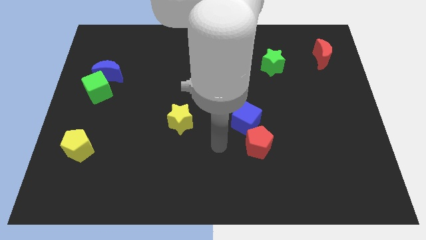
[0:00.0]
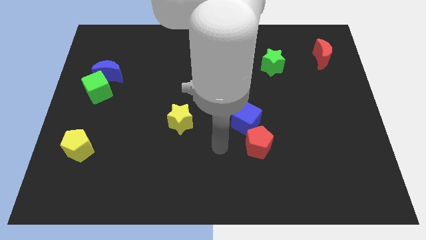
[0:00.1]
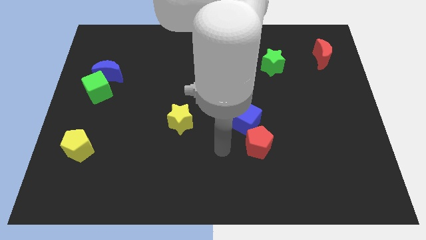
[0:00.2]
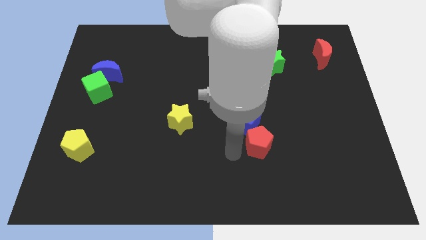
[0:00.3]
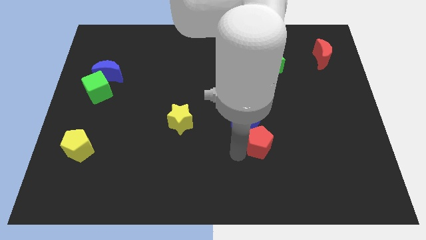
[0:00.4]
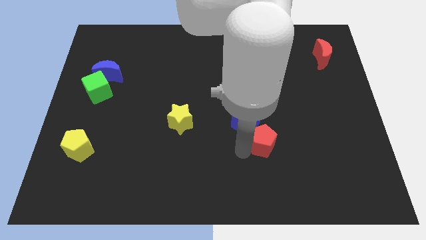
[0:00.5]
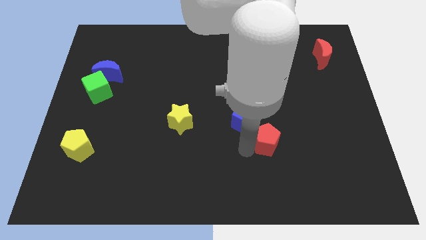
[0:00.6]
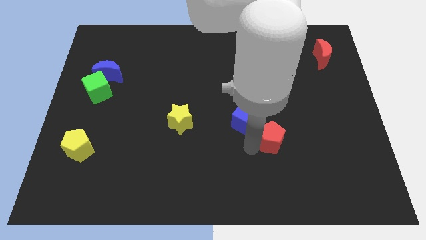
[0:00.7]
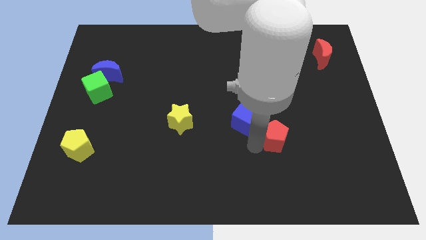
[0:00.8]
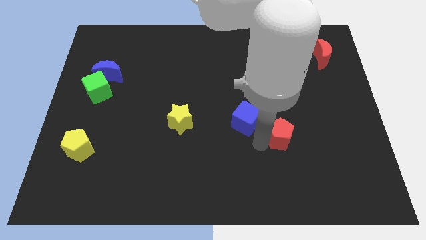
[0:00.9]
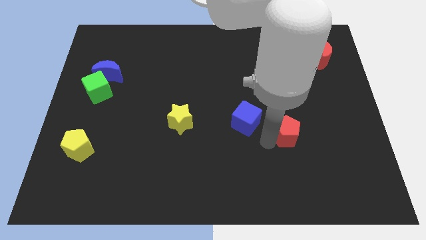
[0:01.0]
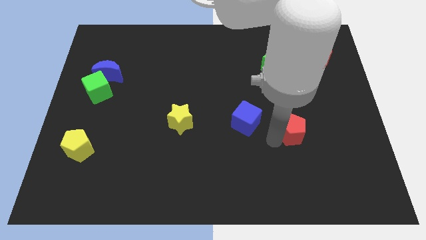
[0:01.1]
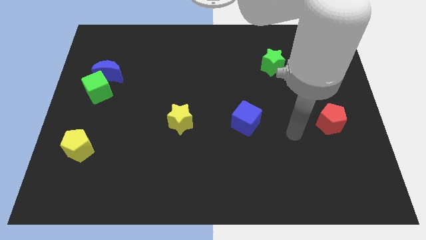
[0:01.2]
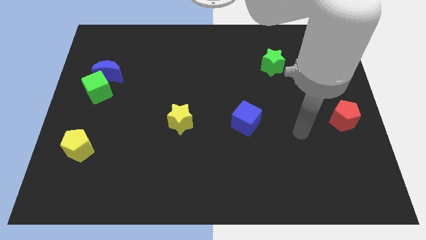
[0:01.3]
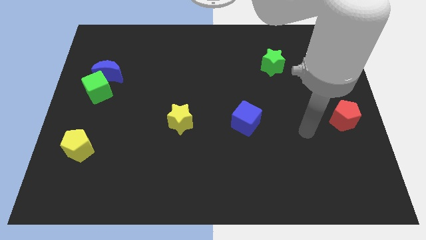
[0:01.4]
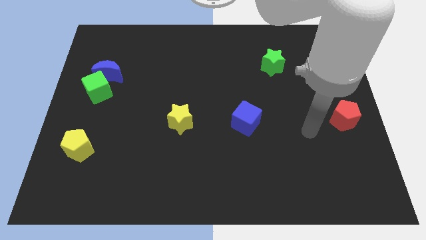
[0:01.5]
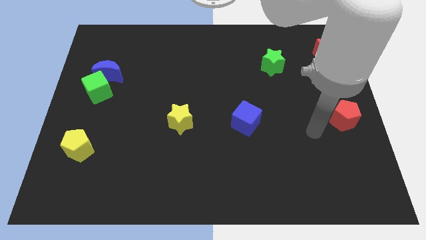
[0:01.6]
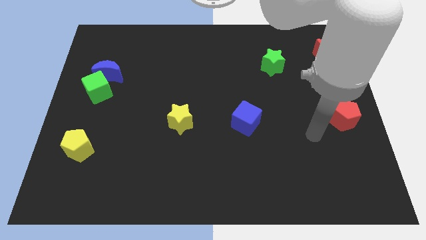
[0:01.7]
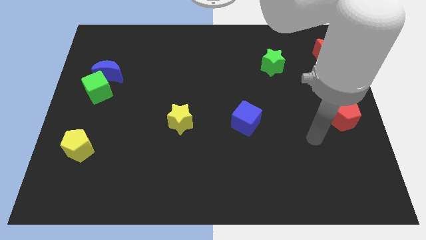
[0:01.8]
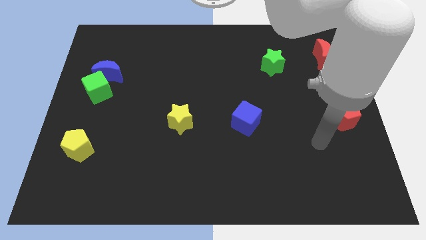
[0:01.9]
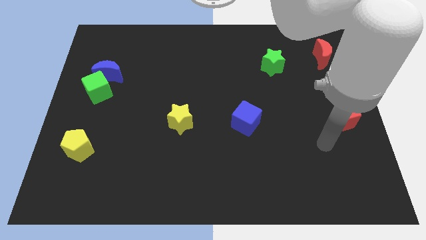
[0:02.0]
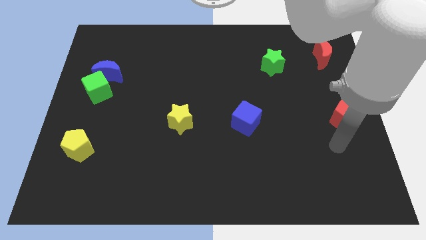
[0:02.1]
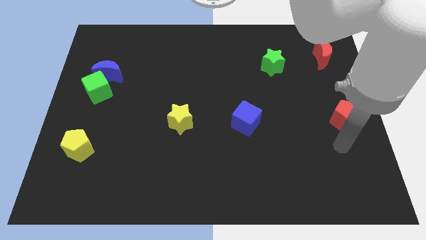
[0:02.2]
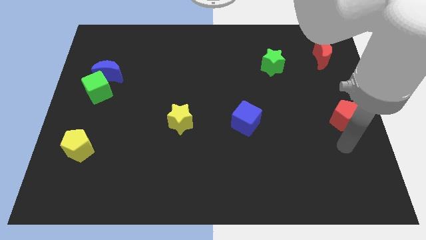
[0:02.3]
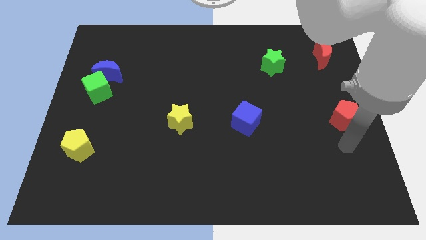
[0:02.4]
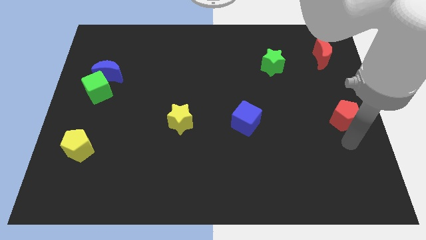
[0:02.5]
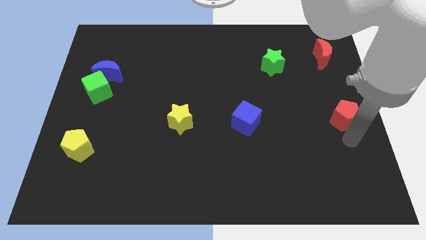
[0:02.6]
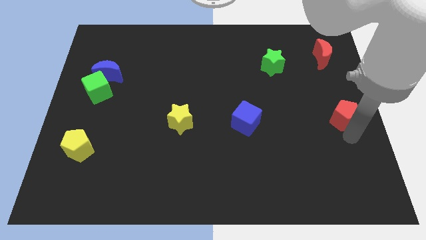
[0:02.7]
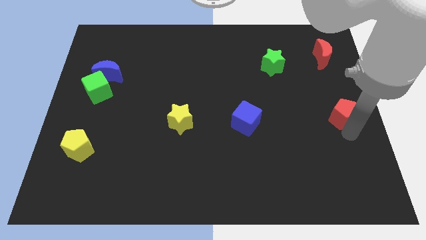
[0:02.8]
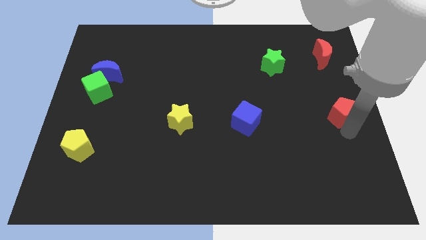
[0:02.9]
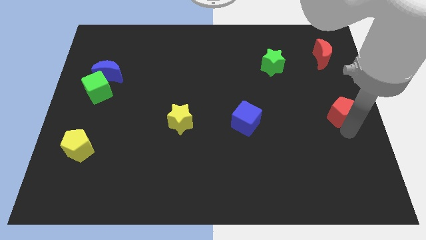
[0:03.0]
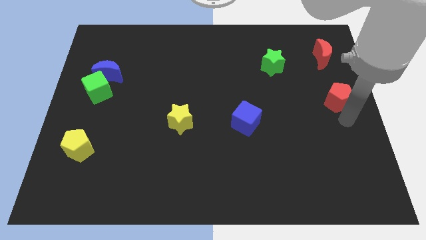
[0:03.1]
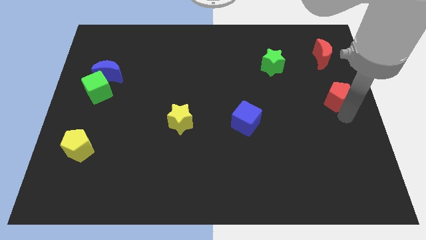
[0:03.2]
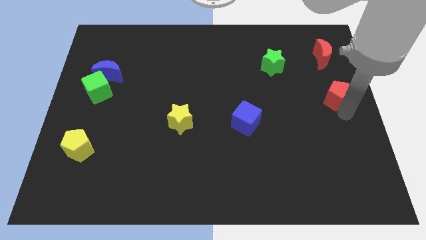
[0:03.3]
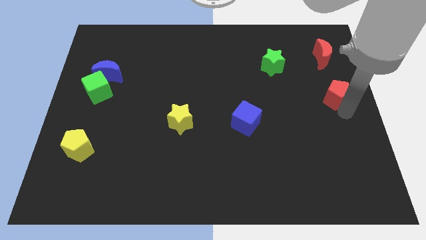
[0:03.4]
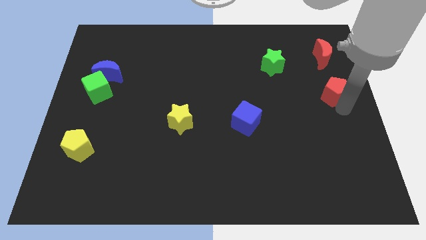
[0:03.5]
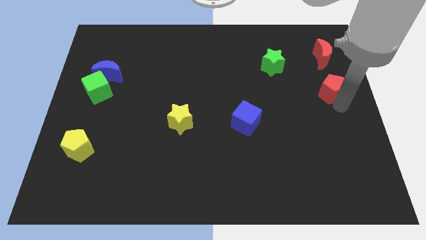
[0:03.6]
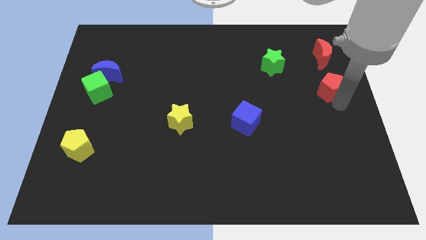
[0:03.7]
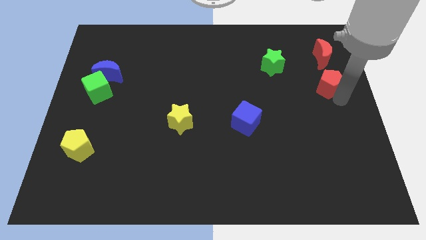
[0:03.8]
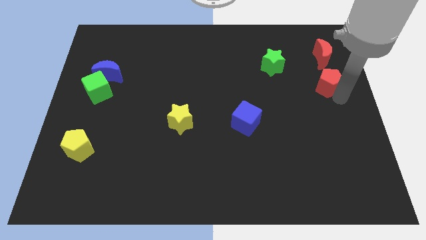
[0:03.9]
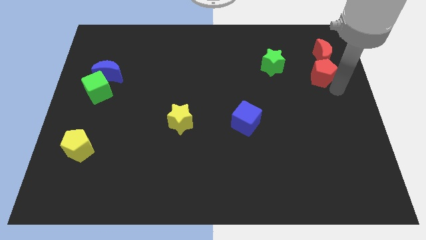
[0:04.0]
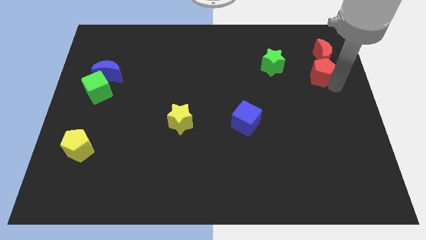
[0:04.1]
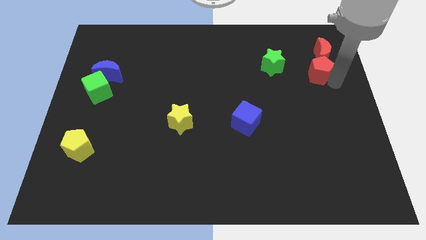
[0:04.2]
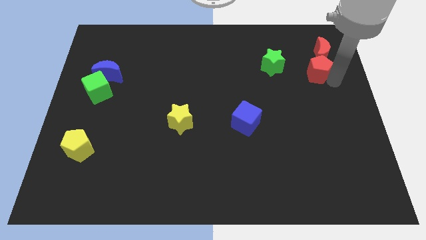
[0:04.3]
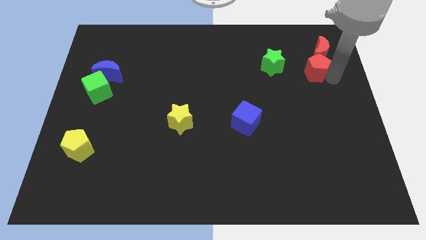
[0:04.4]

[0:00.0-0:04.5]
move the red pentagon towards the red moon

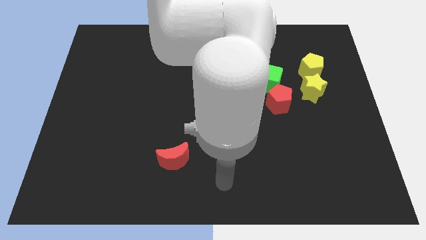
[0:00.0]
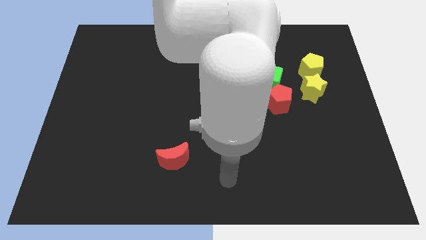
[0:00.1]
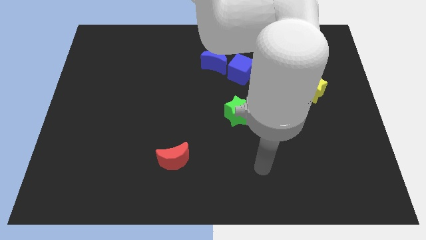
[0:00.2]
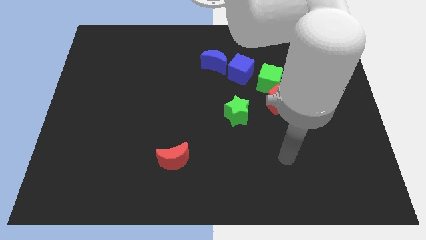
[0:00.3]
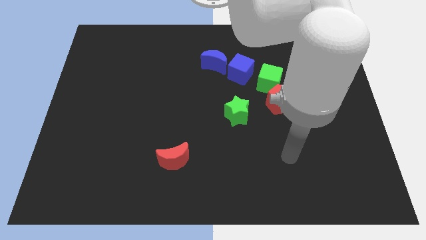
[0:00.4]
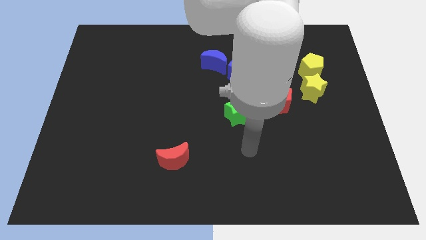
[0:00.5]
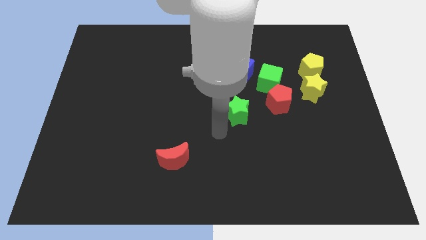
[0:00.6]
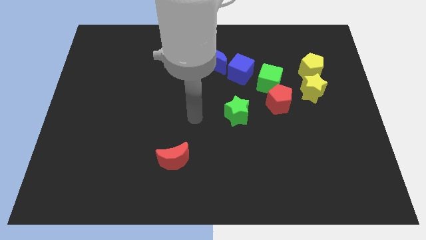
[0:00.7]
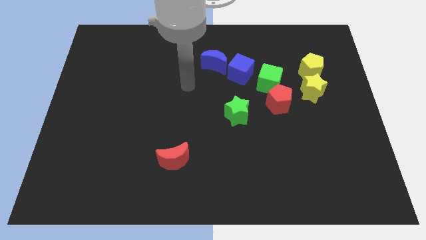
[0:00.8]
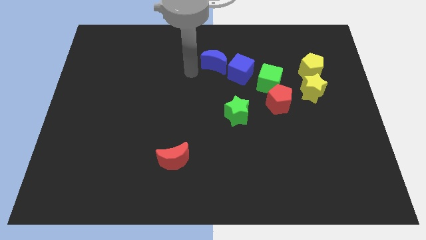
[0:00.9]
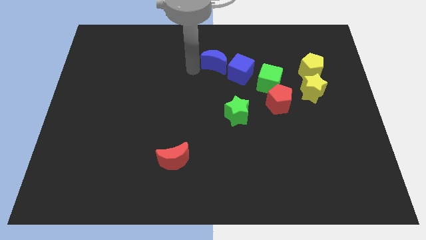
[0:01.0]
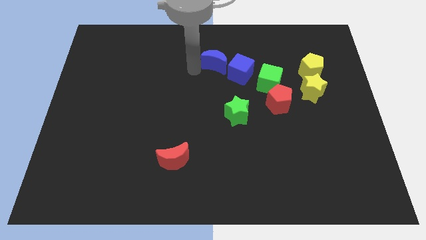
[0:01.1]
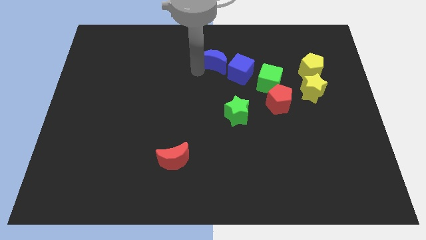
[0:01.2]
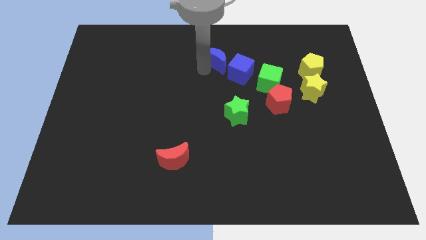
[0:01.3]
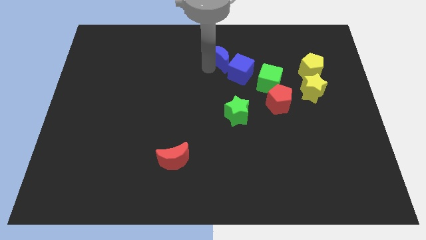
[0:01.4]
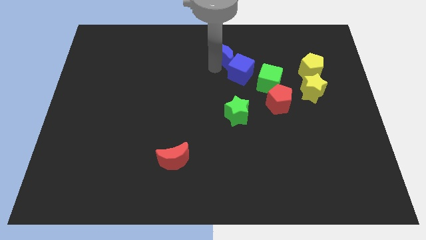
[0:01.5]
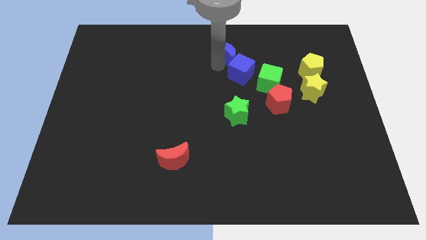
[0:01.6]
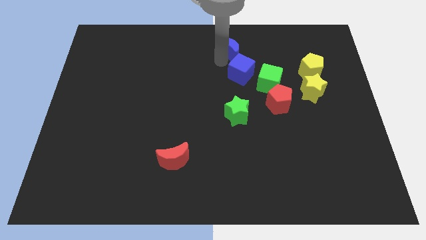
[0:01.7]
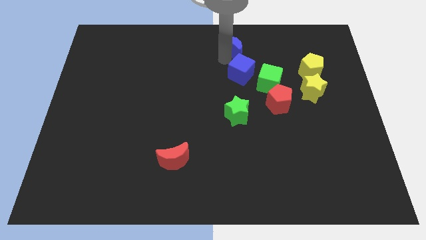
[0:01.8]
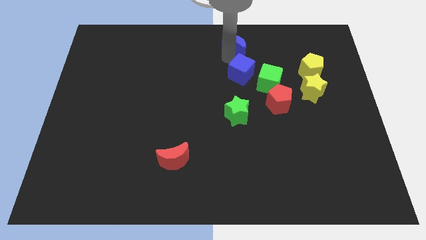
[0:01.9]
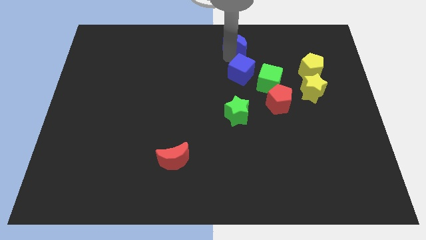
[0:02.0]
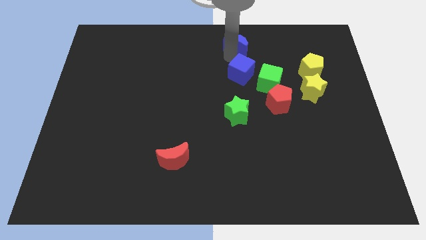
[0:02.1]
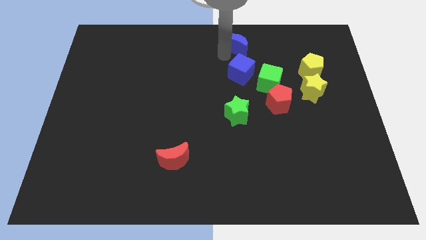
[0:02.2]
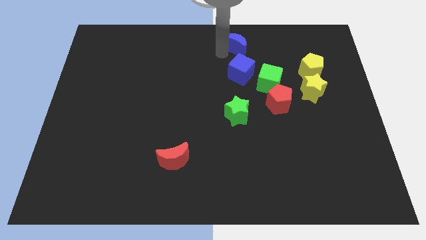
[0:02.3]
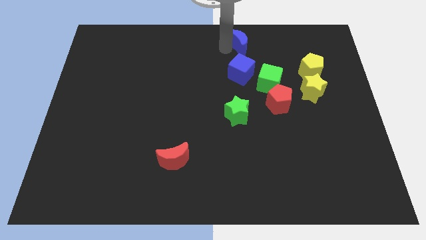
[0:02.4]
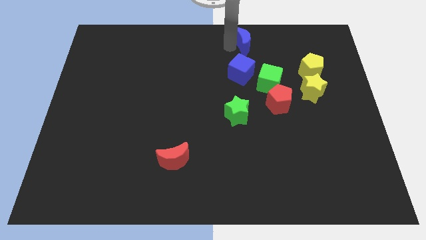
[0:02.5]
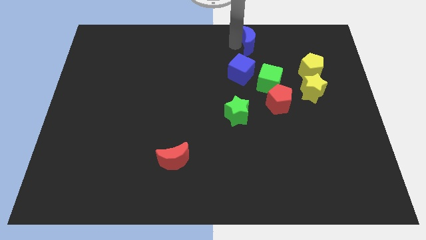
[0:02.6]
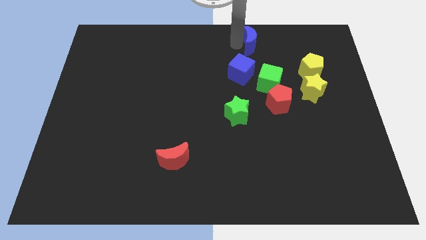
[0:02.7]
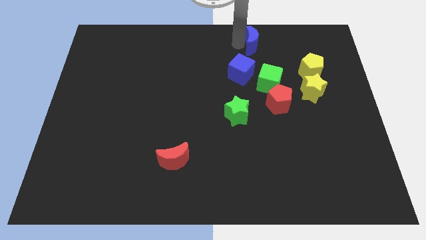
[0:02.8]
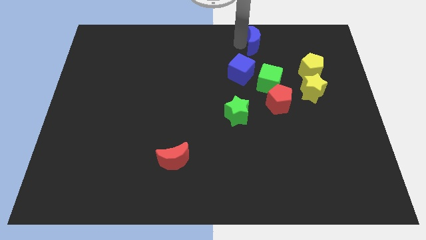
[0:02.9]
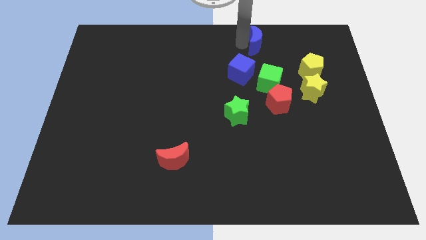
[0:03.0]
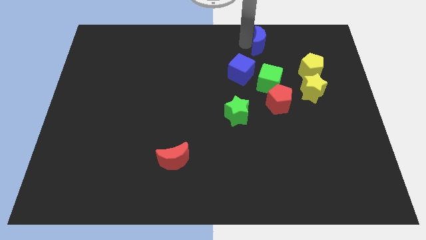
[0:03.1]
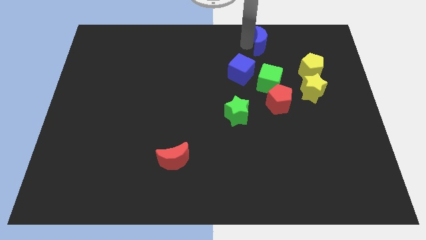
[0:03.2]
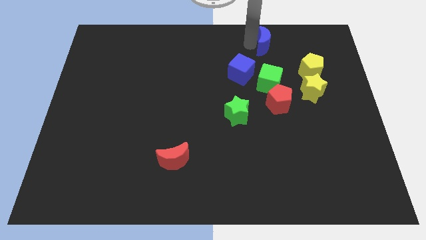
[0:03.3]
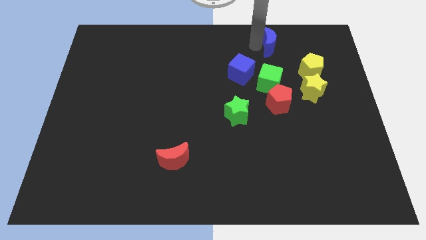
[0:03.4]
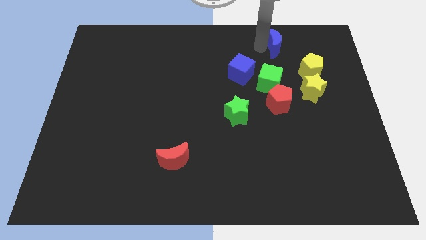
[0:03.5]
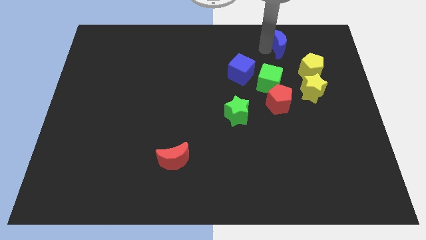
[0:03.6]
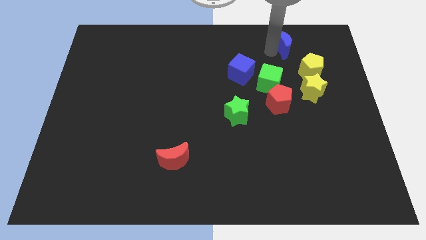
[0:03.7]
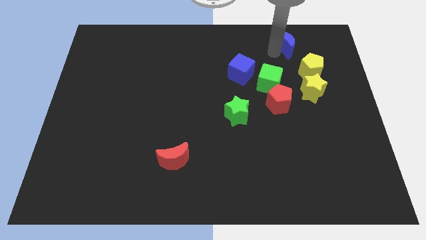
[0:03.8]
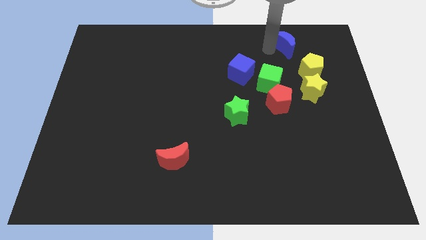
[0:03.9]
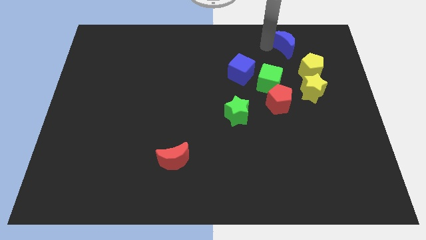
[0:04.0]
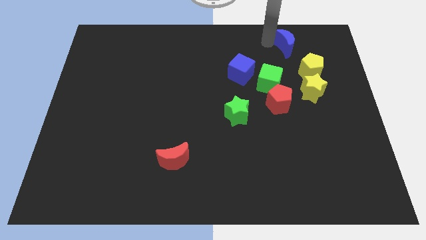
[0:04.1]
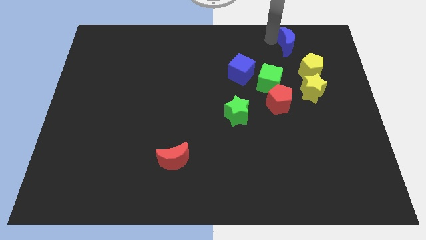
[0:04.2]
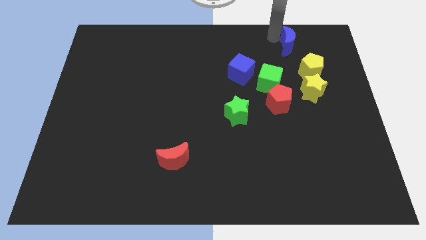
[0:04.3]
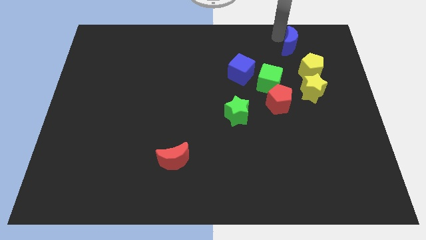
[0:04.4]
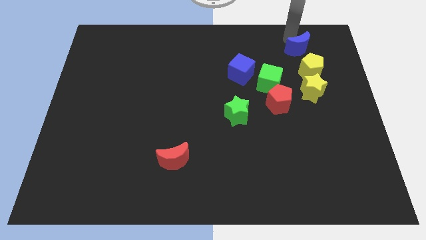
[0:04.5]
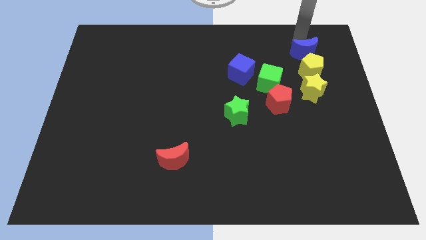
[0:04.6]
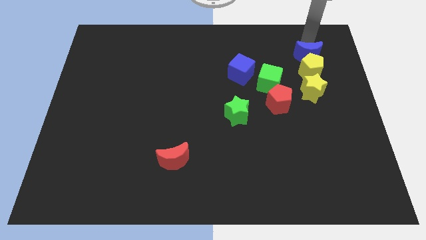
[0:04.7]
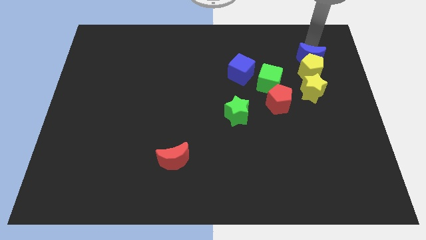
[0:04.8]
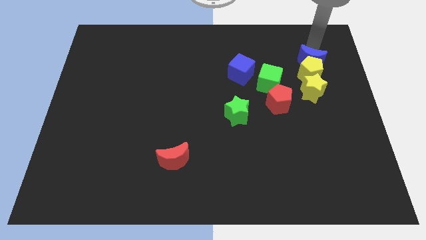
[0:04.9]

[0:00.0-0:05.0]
move the blue moon close to the yellow pentagon
